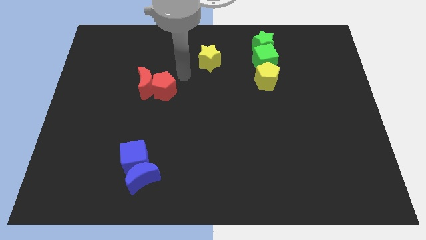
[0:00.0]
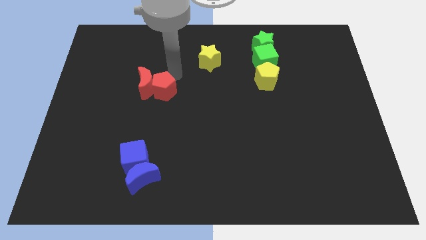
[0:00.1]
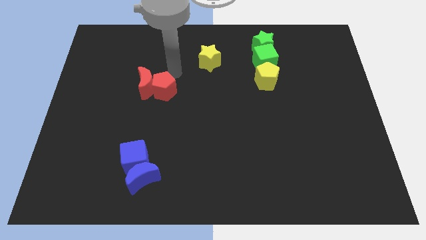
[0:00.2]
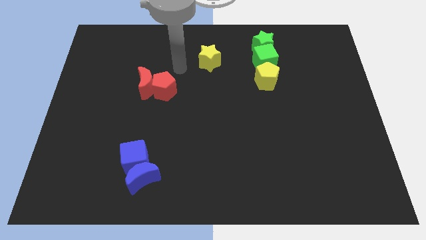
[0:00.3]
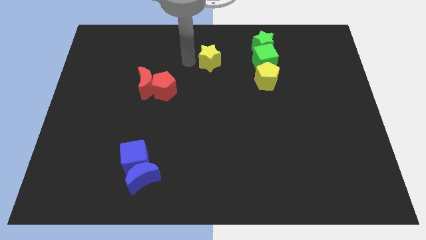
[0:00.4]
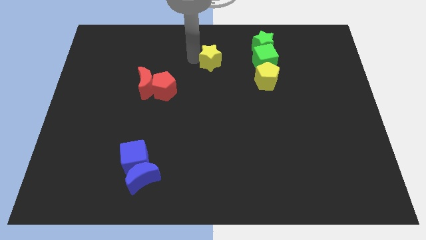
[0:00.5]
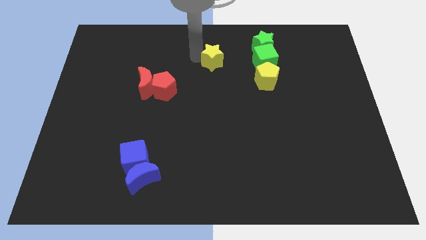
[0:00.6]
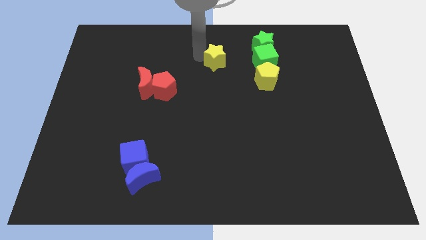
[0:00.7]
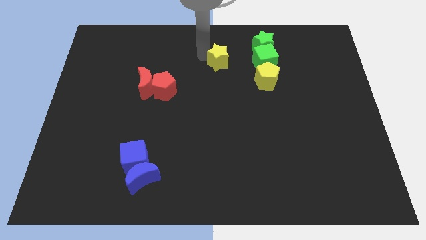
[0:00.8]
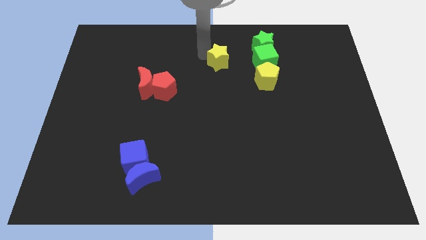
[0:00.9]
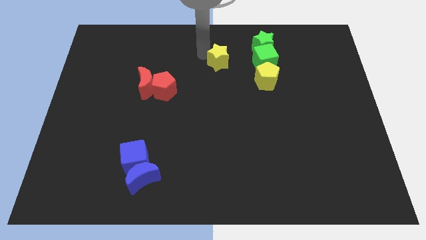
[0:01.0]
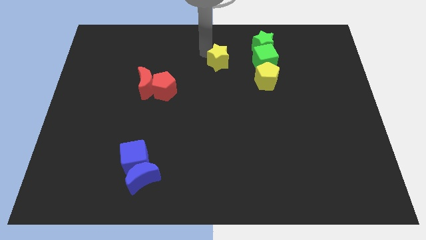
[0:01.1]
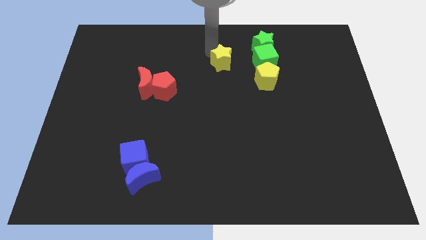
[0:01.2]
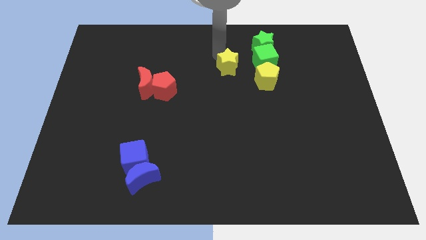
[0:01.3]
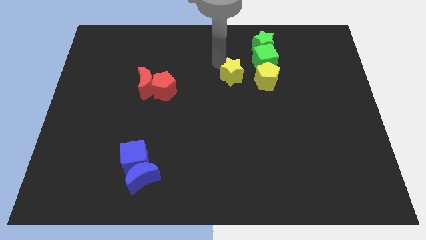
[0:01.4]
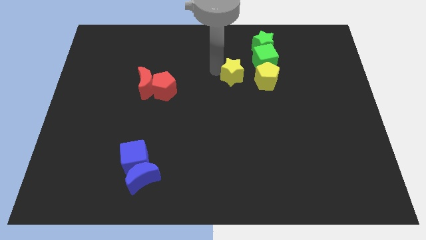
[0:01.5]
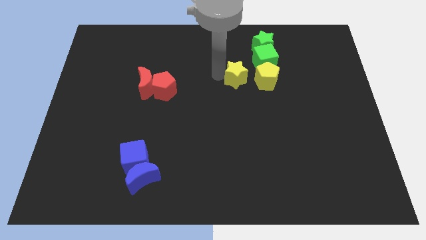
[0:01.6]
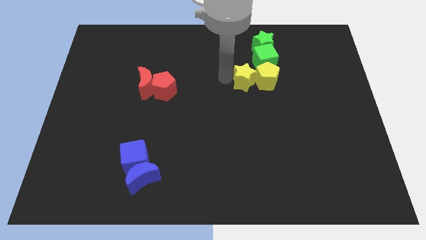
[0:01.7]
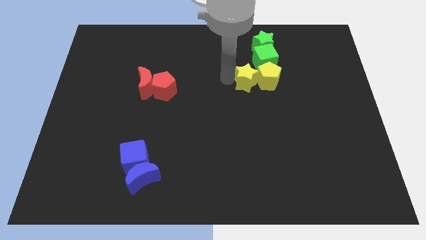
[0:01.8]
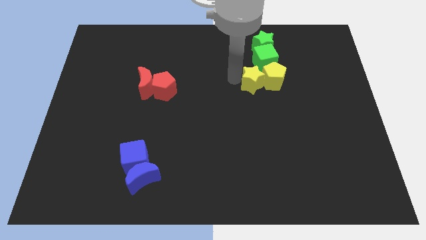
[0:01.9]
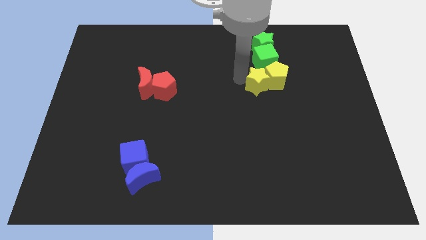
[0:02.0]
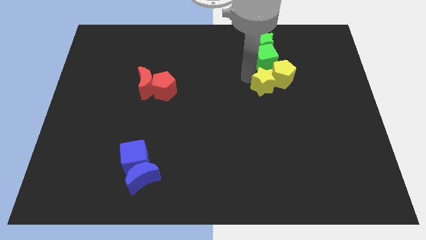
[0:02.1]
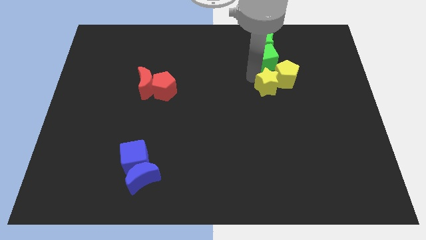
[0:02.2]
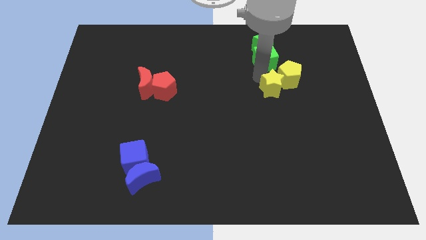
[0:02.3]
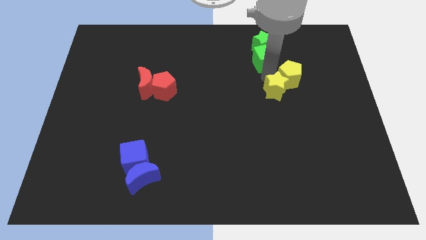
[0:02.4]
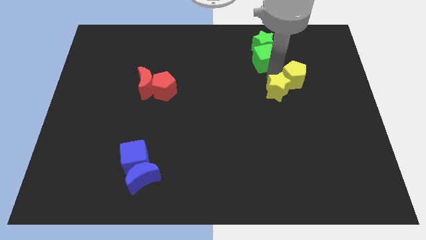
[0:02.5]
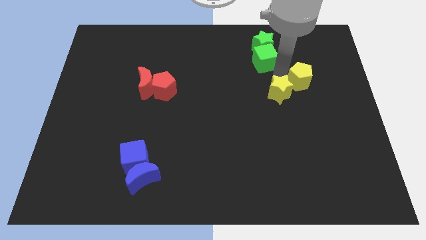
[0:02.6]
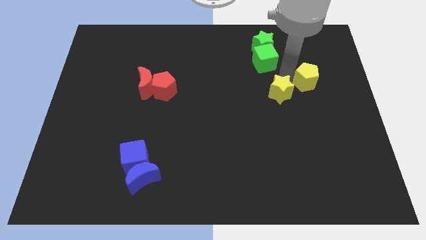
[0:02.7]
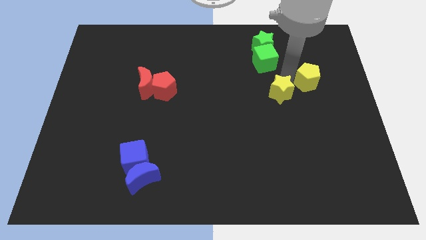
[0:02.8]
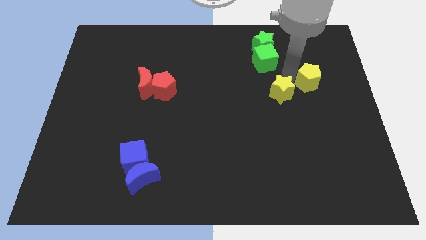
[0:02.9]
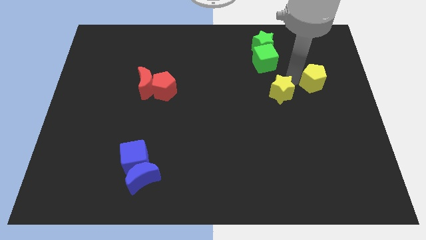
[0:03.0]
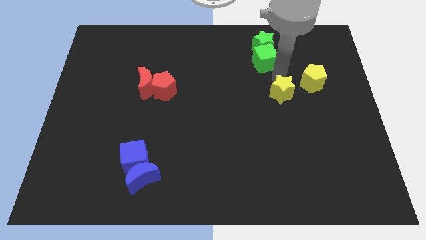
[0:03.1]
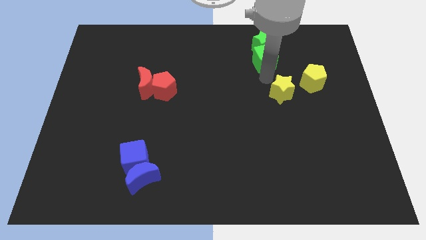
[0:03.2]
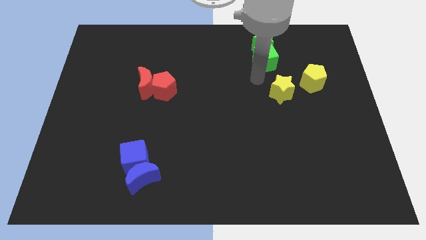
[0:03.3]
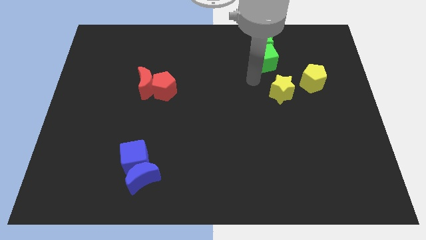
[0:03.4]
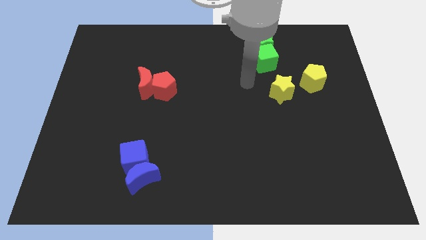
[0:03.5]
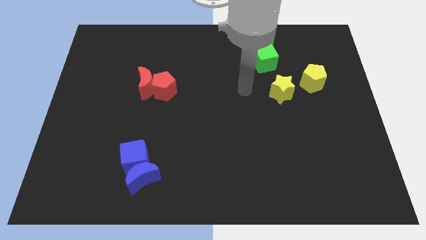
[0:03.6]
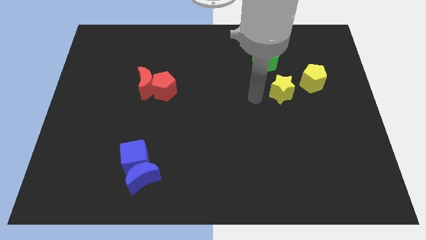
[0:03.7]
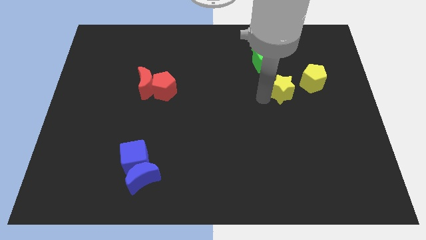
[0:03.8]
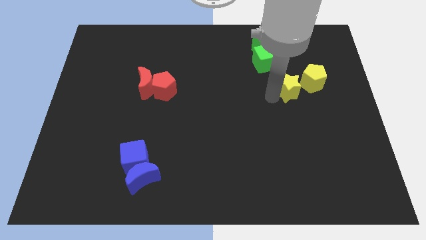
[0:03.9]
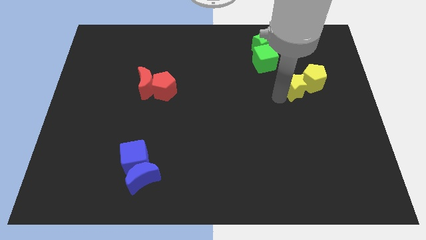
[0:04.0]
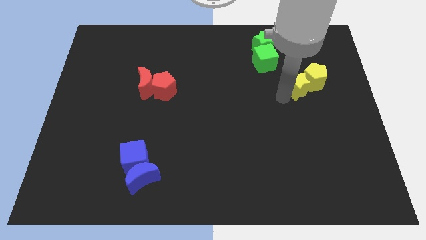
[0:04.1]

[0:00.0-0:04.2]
move the yellow star towards the yellow pentagon

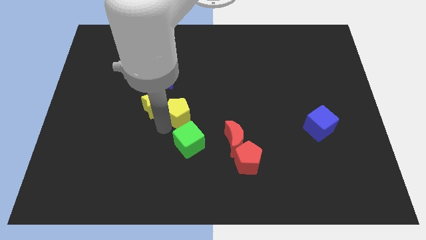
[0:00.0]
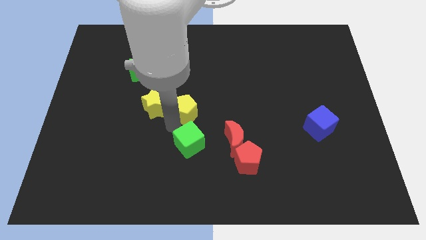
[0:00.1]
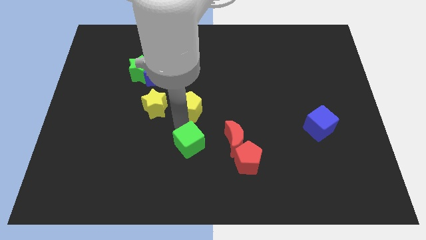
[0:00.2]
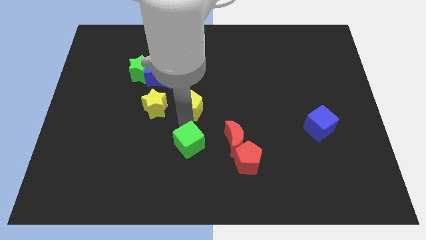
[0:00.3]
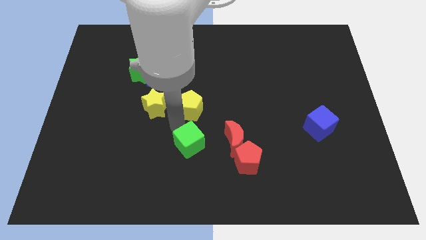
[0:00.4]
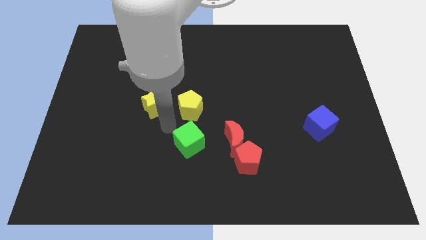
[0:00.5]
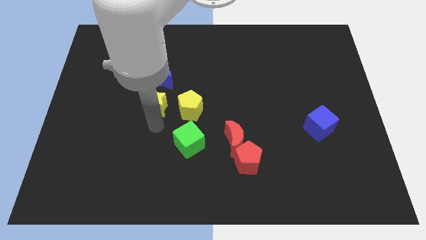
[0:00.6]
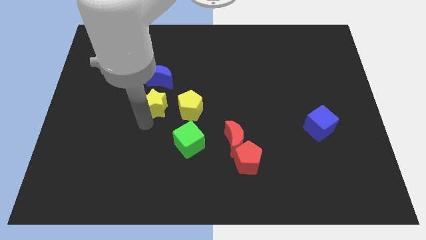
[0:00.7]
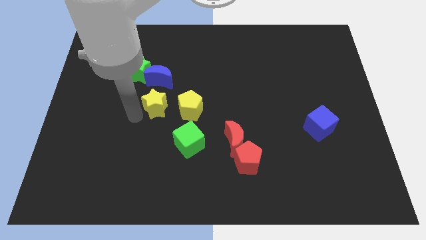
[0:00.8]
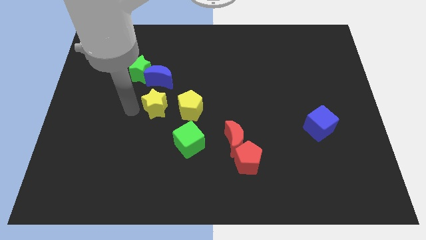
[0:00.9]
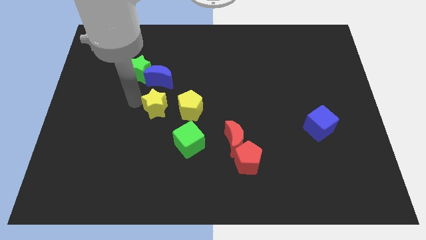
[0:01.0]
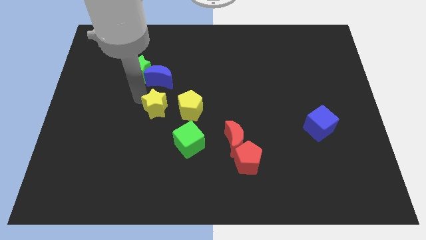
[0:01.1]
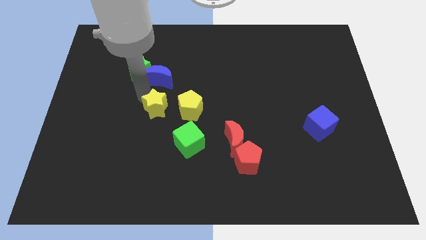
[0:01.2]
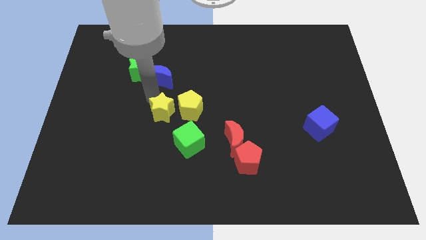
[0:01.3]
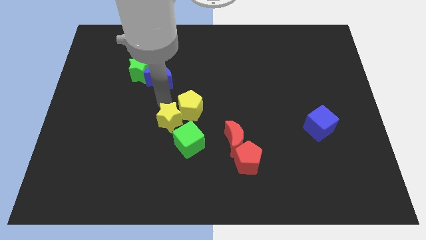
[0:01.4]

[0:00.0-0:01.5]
separate yellow pentagon from yellow star

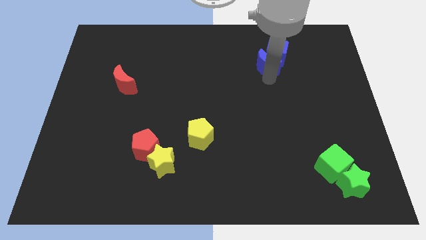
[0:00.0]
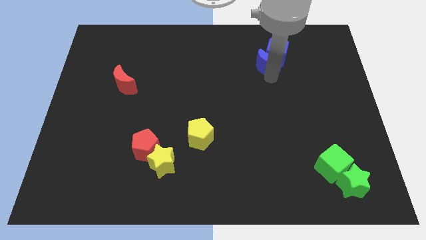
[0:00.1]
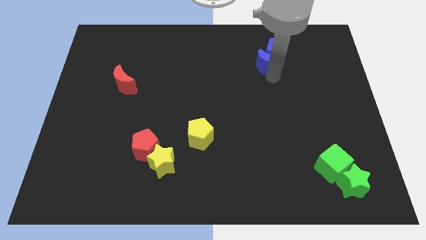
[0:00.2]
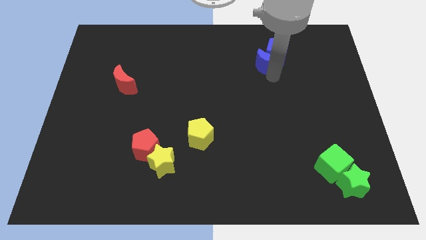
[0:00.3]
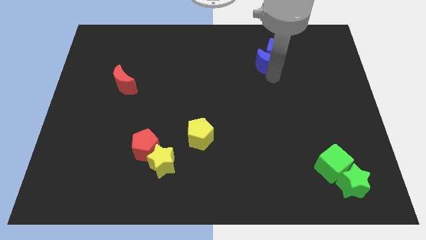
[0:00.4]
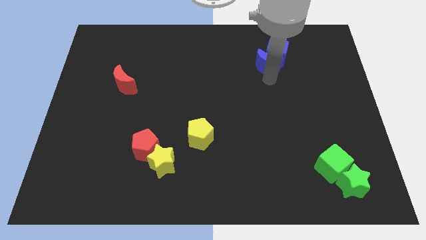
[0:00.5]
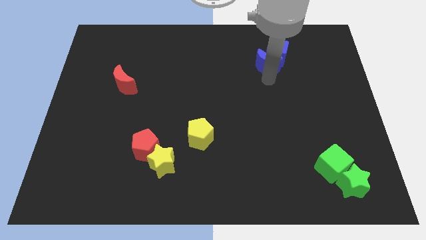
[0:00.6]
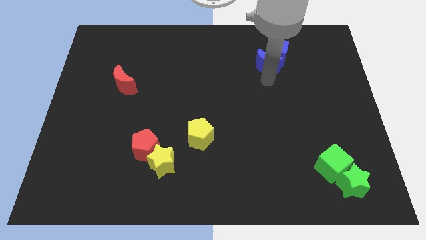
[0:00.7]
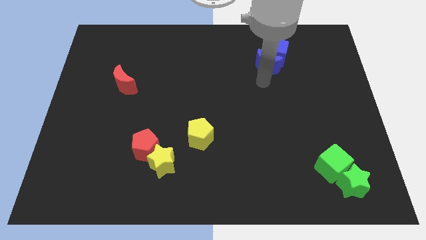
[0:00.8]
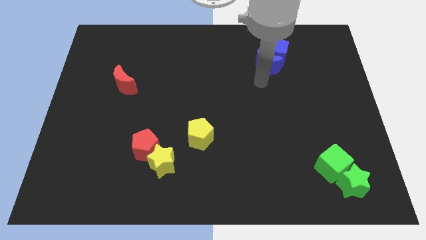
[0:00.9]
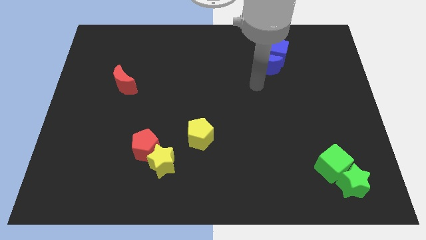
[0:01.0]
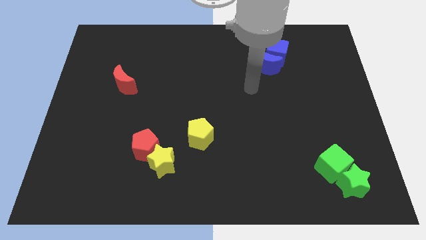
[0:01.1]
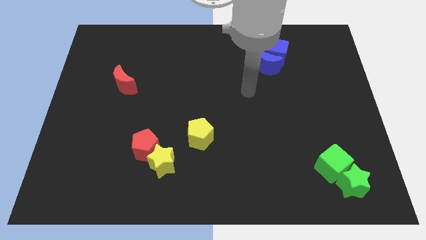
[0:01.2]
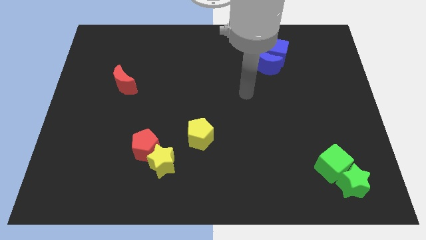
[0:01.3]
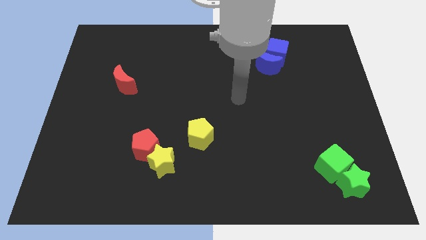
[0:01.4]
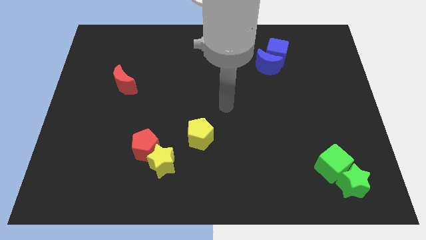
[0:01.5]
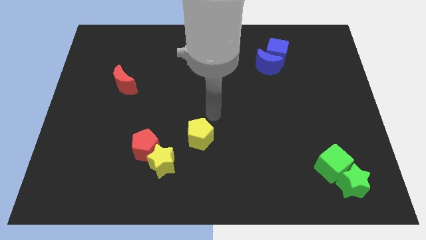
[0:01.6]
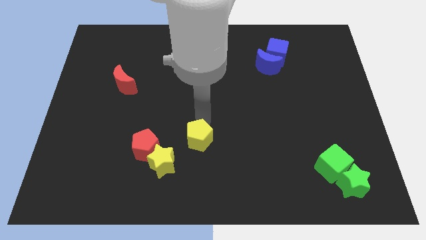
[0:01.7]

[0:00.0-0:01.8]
place the arm above the yellow pentagon

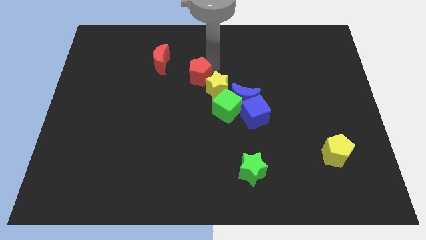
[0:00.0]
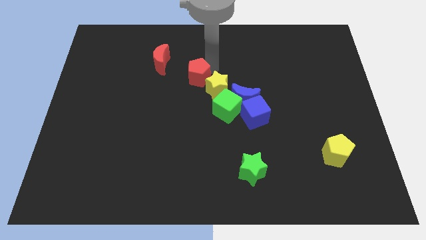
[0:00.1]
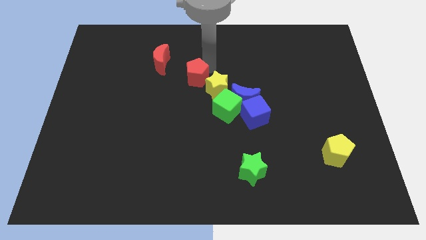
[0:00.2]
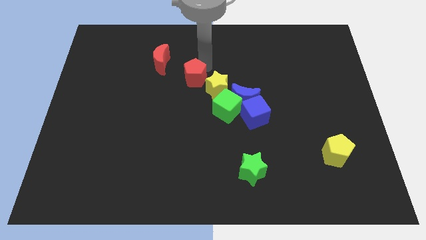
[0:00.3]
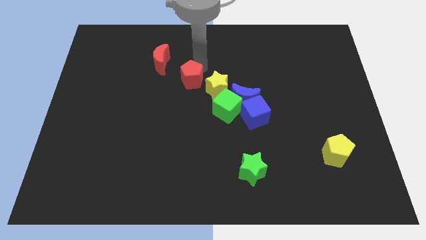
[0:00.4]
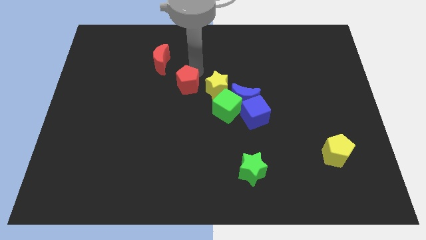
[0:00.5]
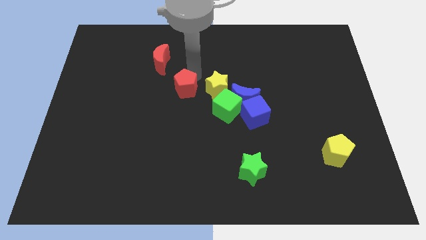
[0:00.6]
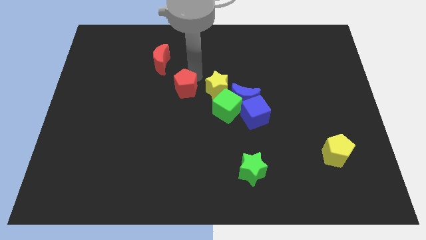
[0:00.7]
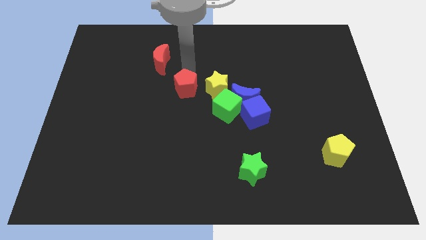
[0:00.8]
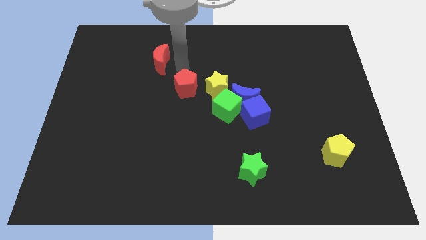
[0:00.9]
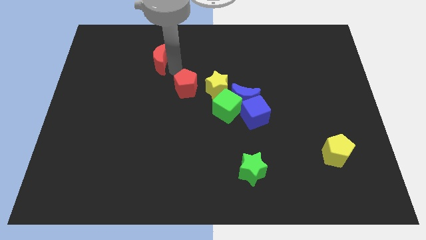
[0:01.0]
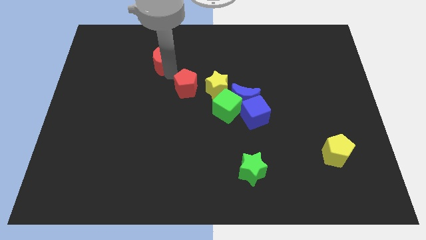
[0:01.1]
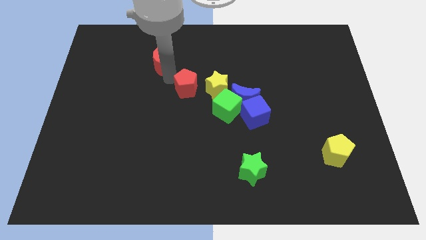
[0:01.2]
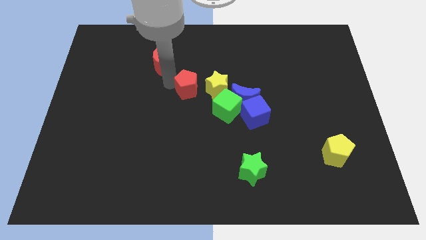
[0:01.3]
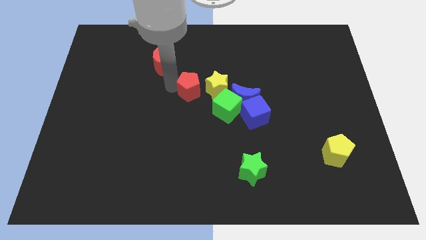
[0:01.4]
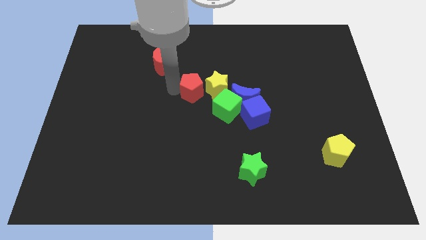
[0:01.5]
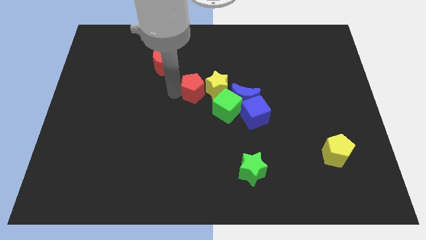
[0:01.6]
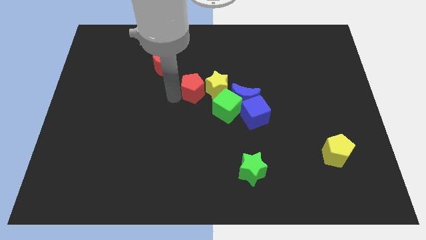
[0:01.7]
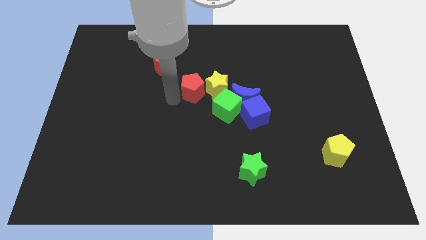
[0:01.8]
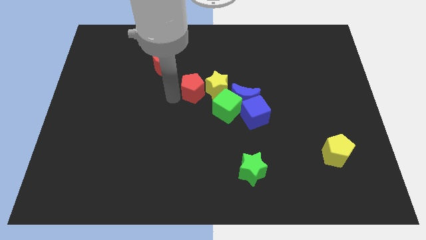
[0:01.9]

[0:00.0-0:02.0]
push the red pentagon parallel left to the yellow star
